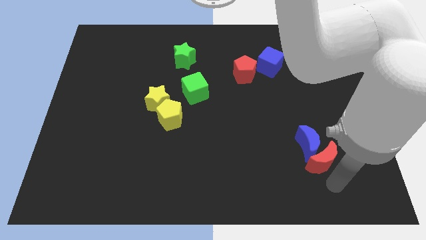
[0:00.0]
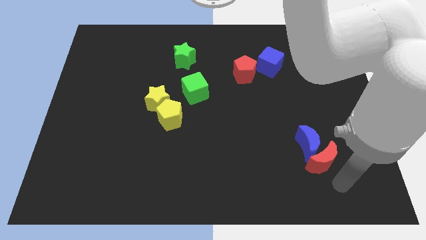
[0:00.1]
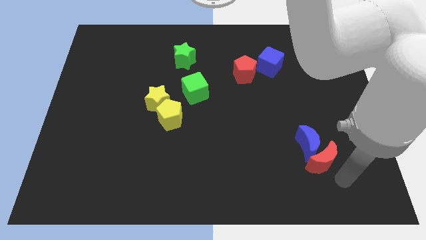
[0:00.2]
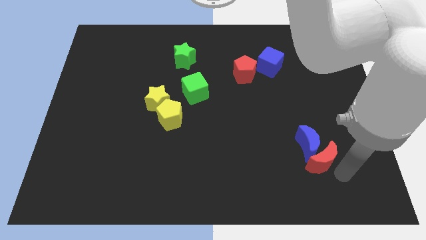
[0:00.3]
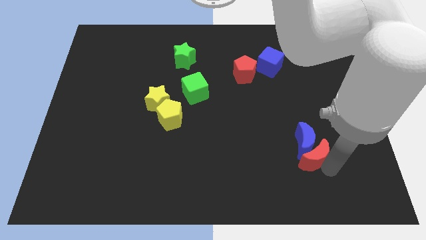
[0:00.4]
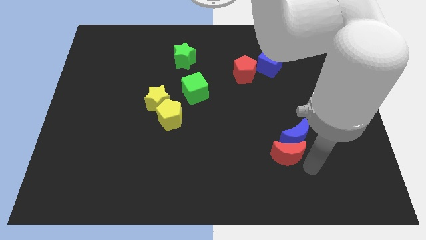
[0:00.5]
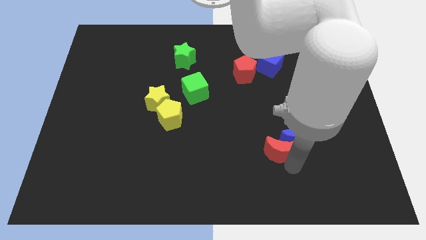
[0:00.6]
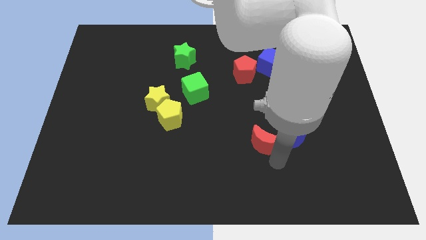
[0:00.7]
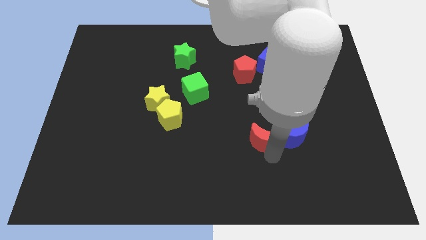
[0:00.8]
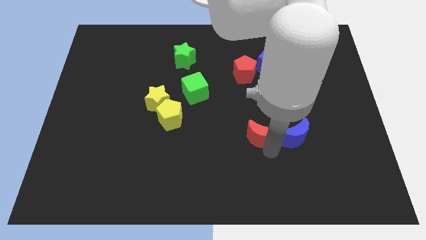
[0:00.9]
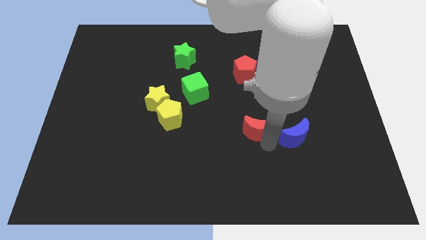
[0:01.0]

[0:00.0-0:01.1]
push the red crescent to the left of the blue crescent

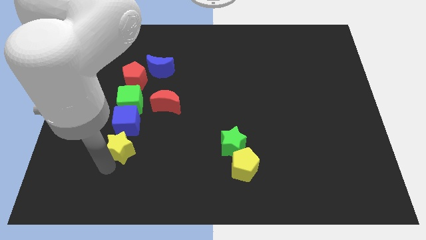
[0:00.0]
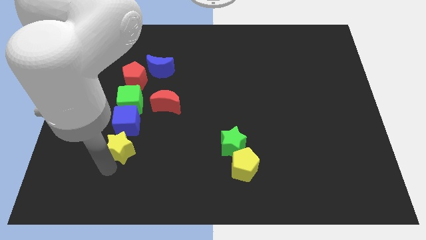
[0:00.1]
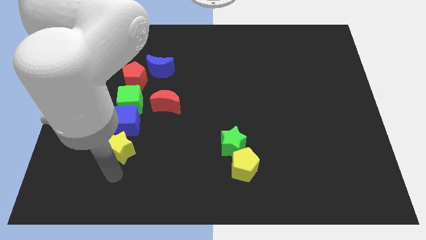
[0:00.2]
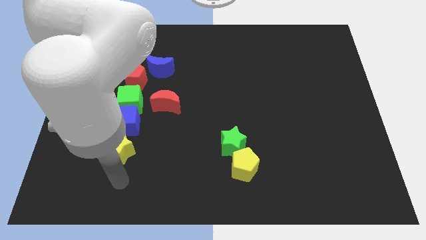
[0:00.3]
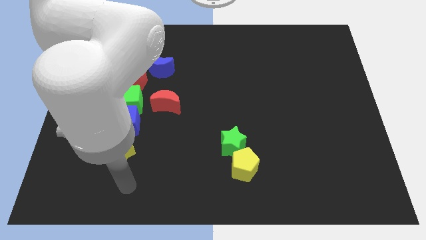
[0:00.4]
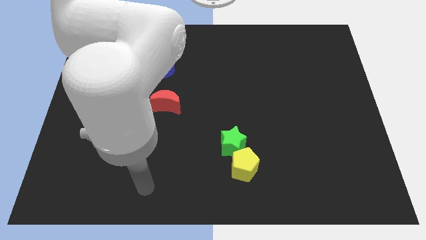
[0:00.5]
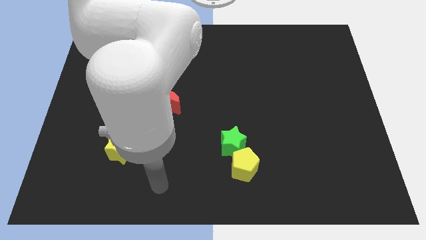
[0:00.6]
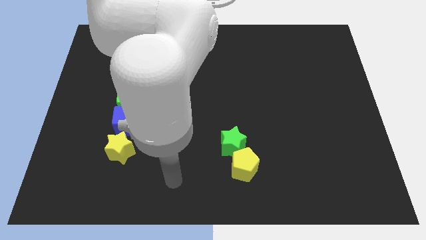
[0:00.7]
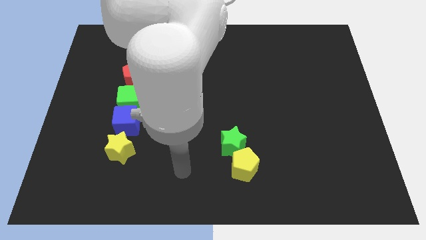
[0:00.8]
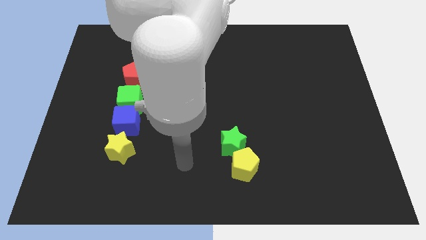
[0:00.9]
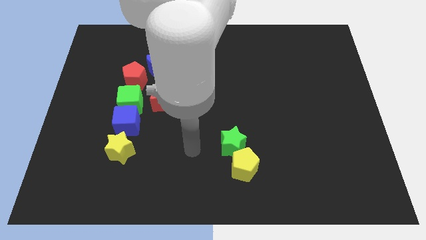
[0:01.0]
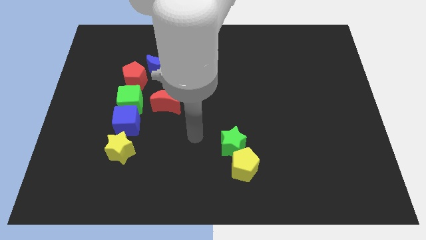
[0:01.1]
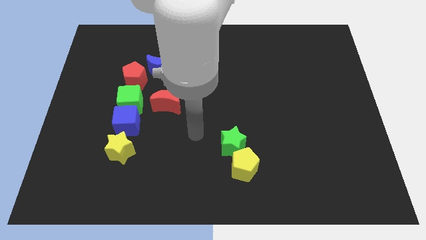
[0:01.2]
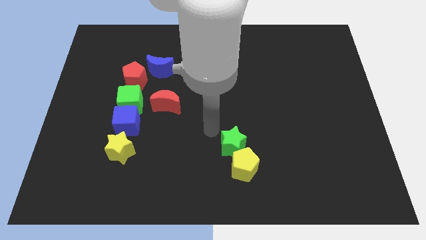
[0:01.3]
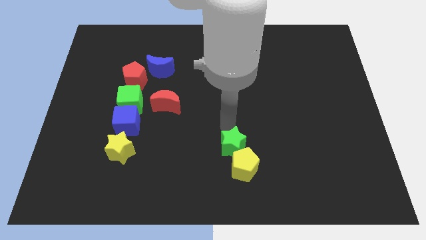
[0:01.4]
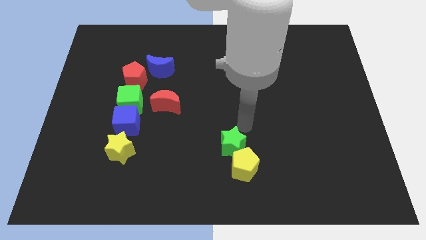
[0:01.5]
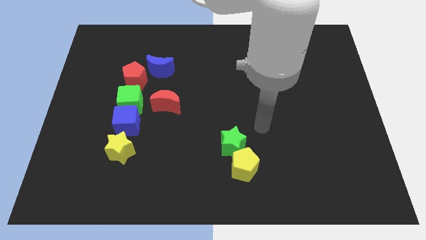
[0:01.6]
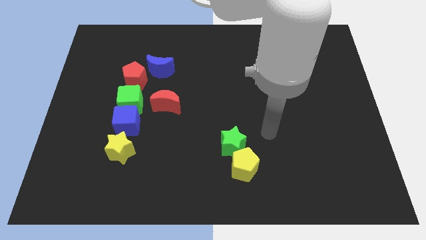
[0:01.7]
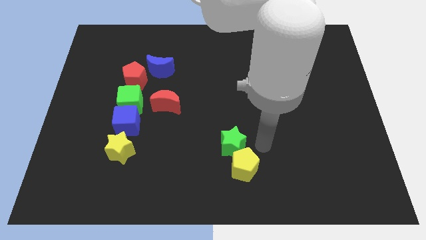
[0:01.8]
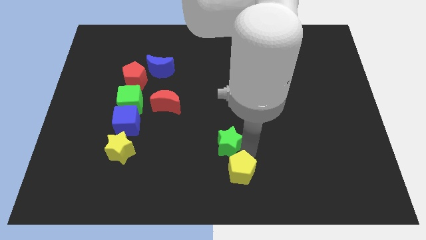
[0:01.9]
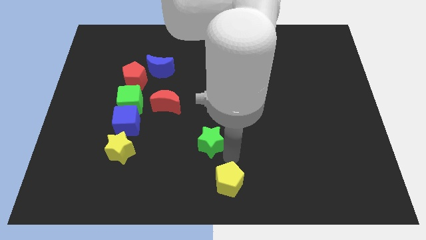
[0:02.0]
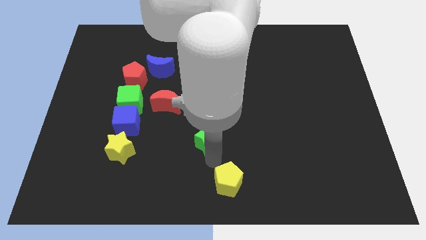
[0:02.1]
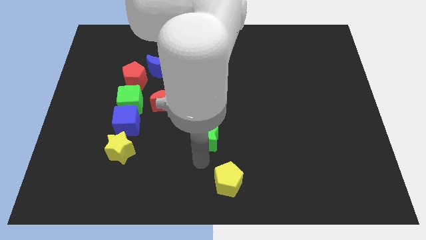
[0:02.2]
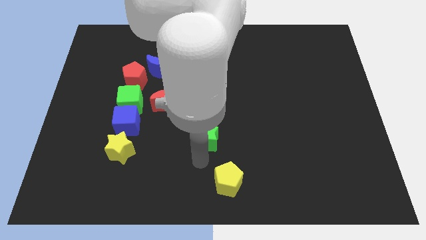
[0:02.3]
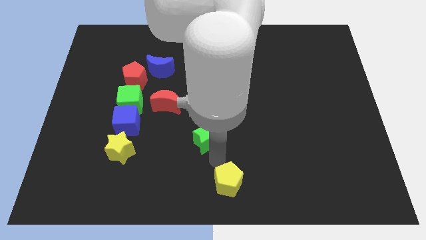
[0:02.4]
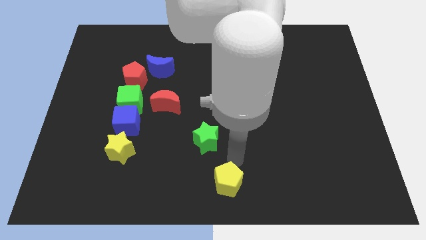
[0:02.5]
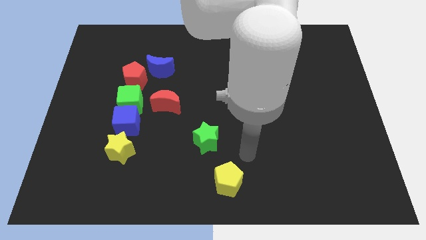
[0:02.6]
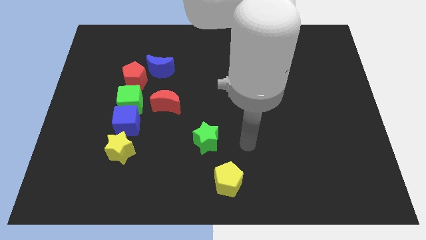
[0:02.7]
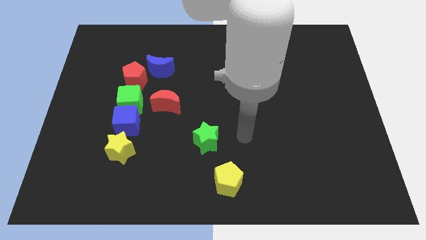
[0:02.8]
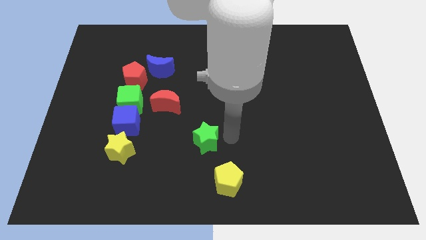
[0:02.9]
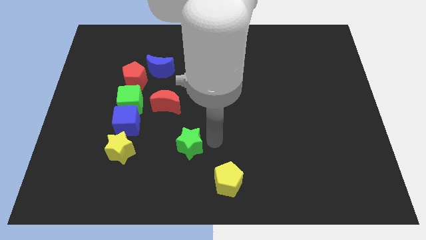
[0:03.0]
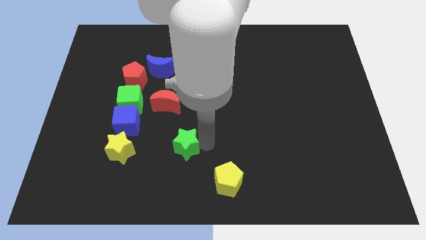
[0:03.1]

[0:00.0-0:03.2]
separate the green star and the yellow pentagon

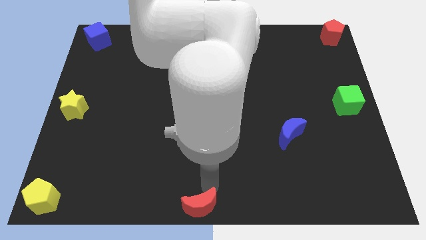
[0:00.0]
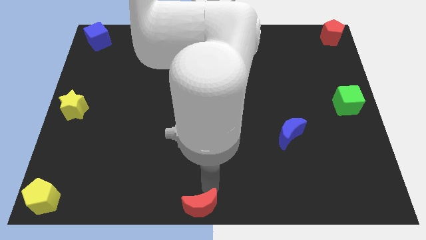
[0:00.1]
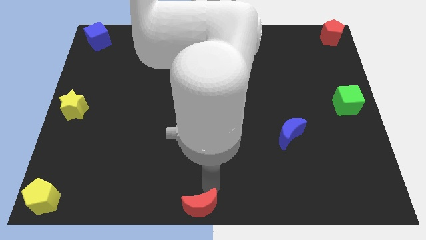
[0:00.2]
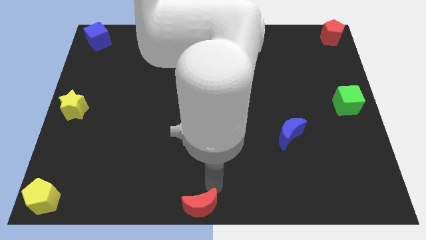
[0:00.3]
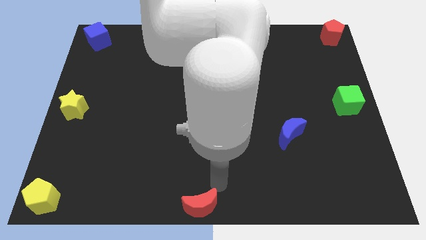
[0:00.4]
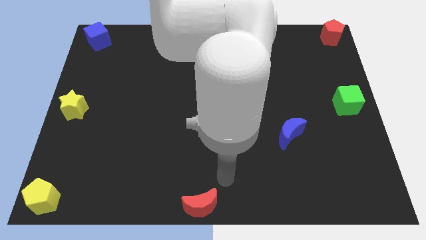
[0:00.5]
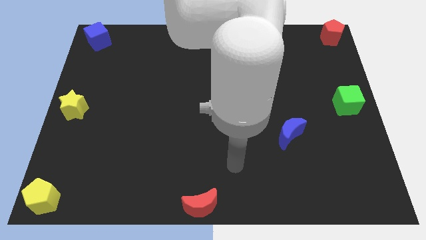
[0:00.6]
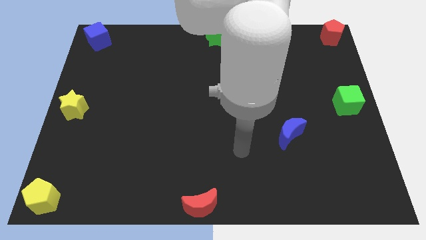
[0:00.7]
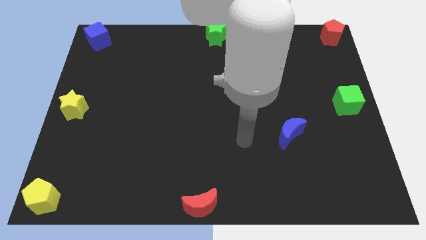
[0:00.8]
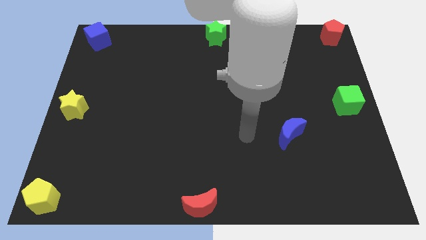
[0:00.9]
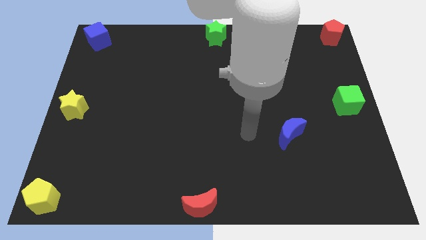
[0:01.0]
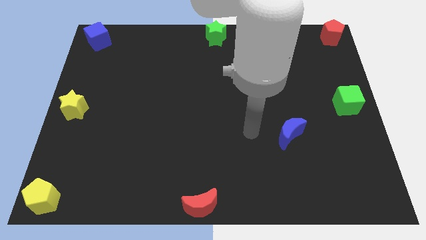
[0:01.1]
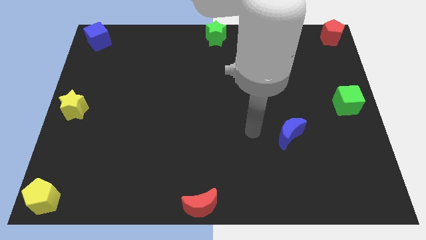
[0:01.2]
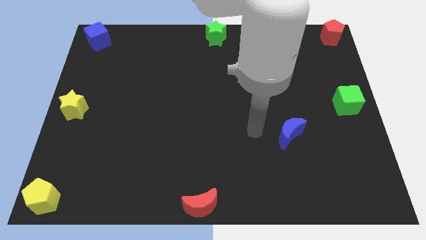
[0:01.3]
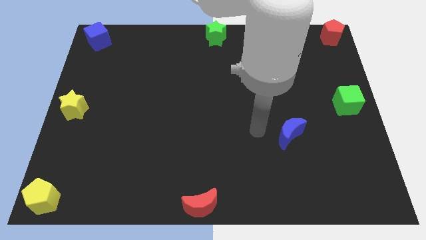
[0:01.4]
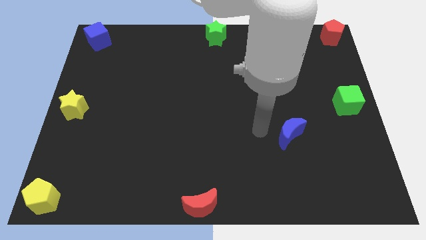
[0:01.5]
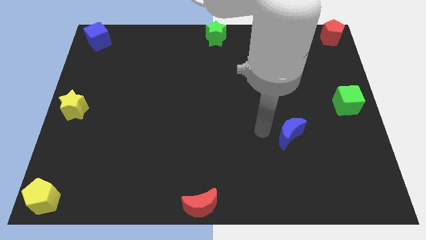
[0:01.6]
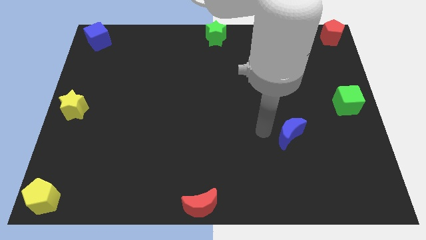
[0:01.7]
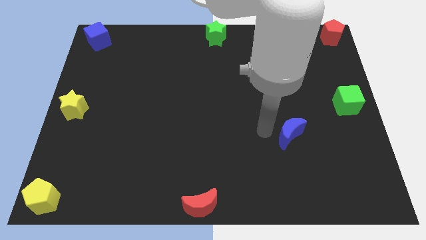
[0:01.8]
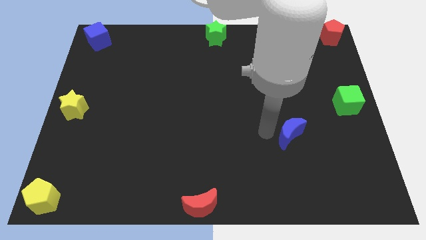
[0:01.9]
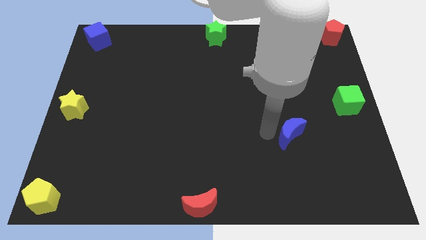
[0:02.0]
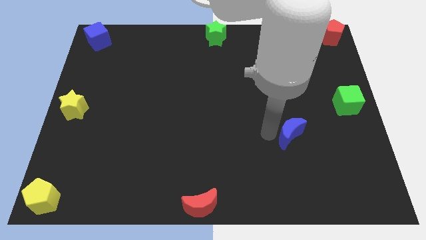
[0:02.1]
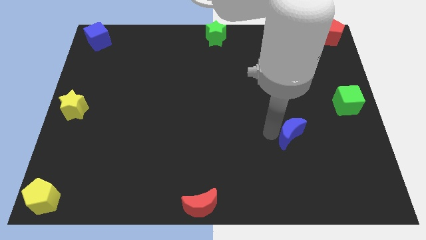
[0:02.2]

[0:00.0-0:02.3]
move your arm to the left of the blue crescent

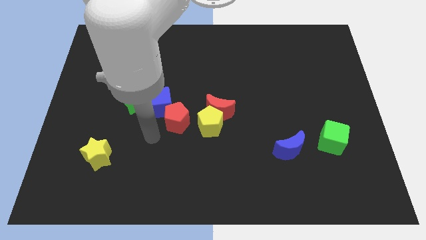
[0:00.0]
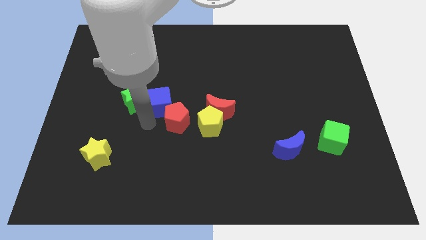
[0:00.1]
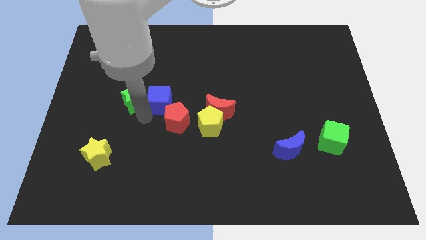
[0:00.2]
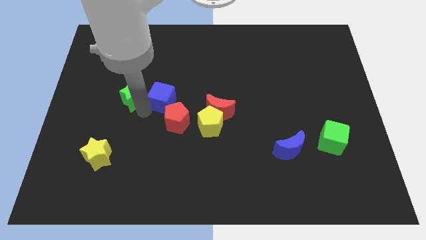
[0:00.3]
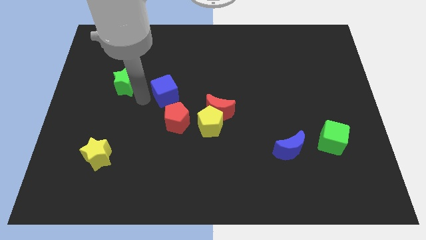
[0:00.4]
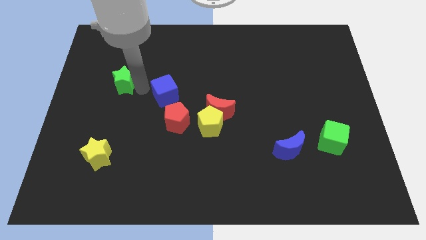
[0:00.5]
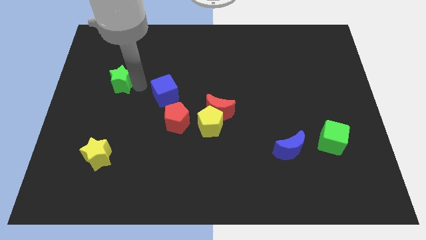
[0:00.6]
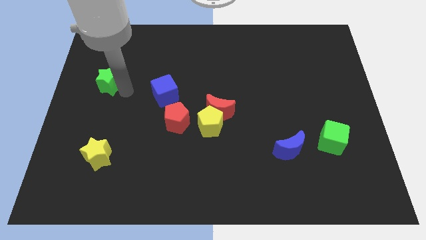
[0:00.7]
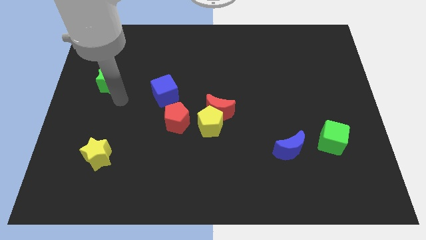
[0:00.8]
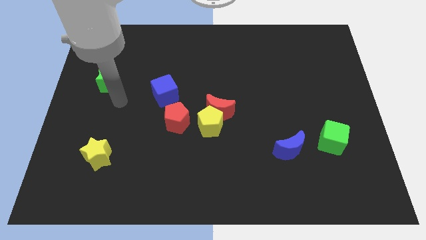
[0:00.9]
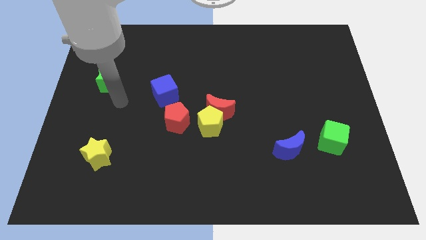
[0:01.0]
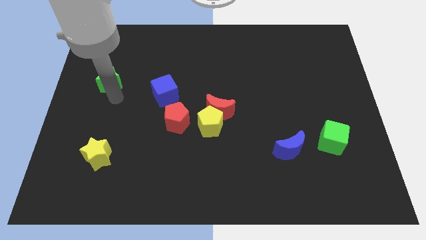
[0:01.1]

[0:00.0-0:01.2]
separate the green star with blue cube

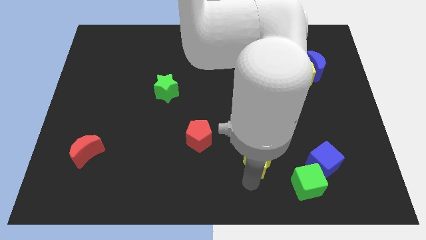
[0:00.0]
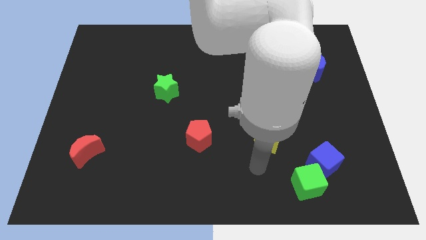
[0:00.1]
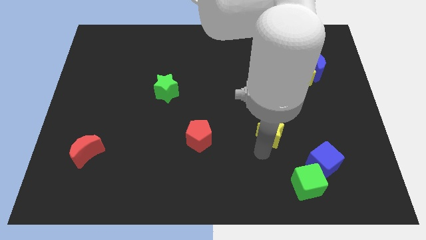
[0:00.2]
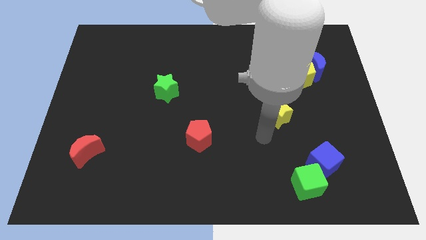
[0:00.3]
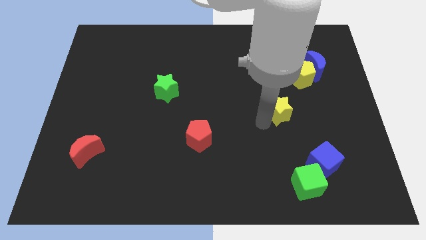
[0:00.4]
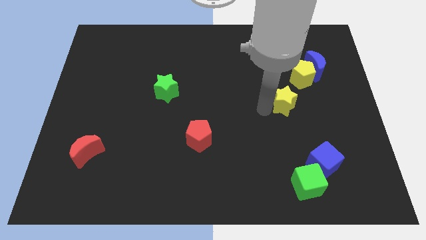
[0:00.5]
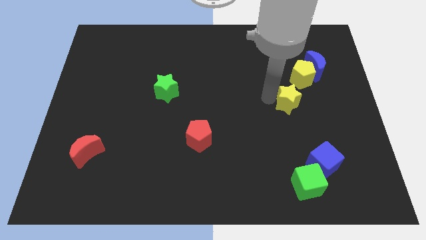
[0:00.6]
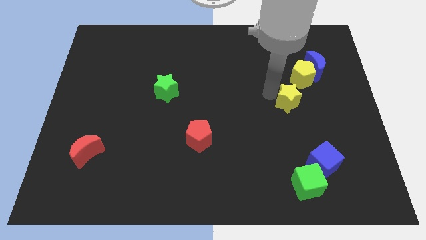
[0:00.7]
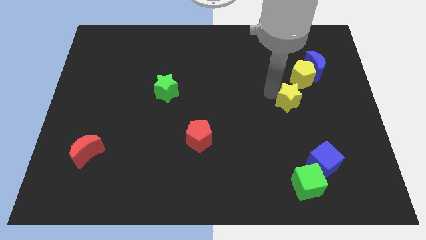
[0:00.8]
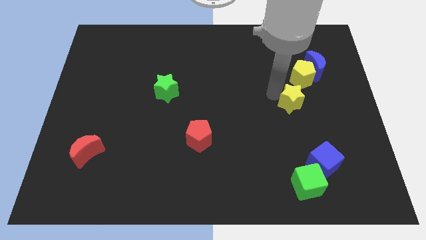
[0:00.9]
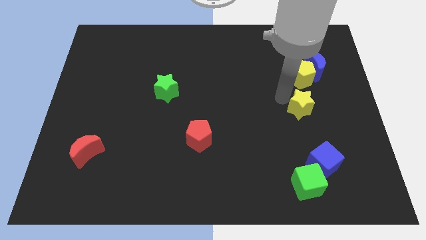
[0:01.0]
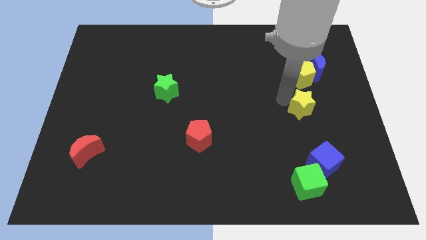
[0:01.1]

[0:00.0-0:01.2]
push the yellow star below the yellow pentagon
